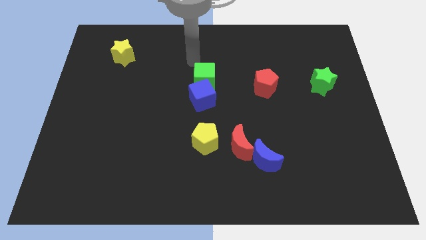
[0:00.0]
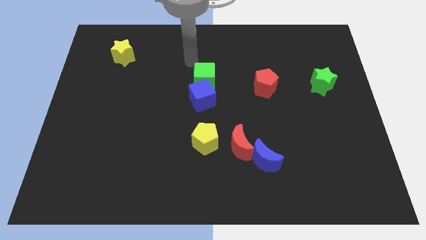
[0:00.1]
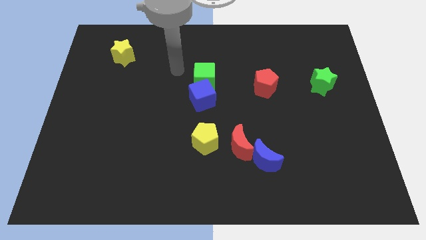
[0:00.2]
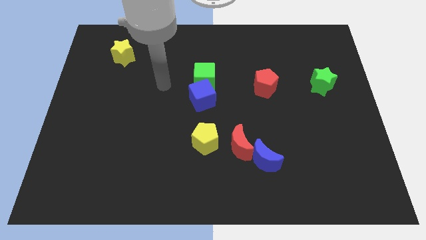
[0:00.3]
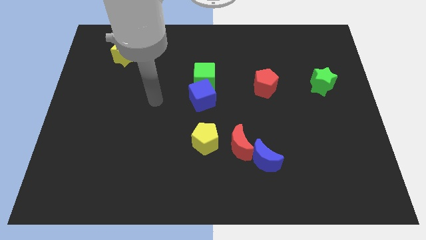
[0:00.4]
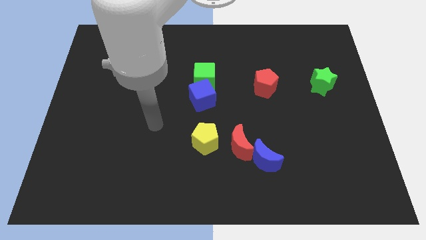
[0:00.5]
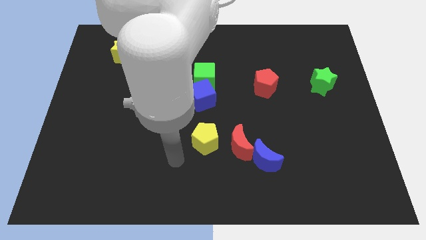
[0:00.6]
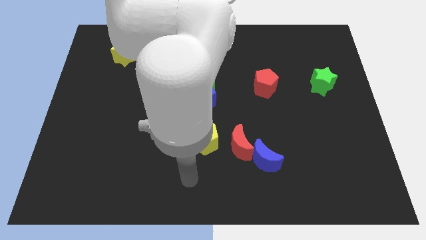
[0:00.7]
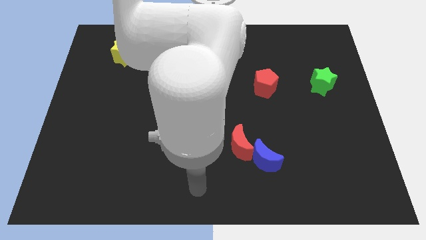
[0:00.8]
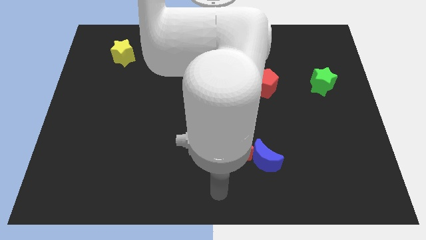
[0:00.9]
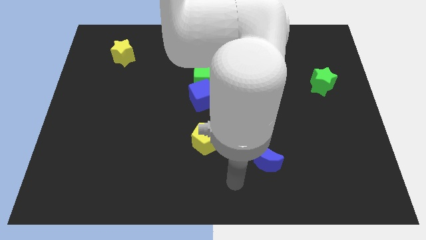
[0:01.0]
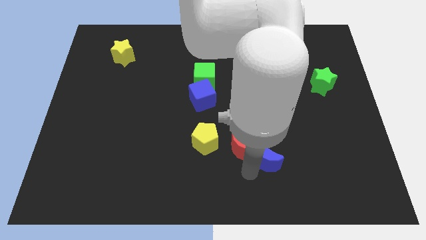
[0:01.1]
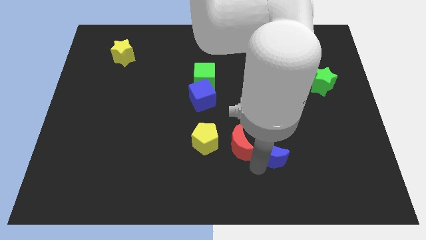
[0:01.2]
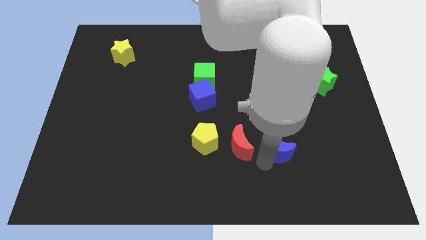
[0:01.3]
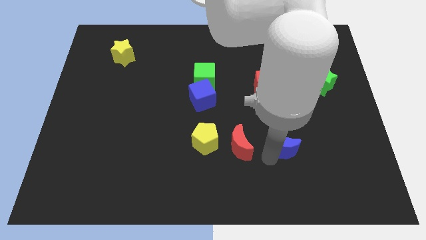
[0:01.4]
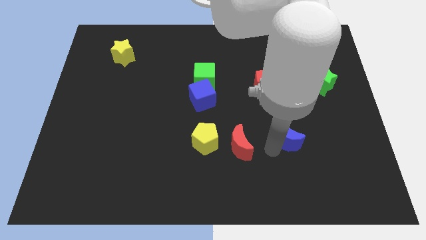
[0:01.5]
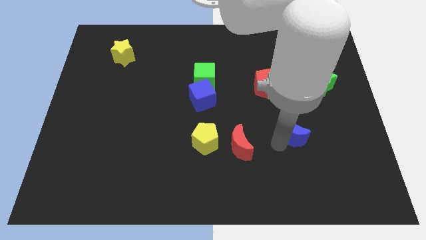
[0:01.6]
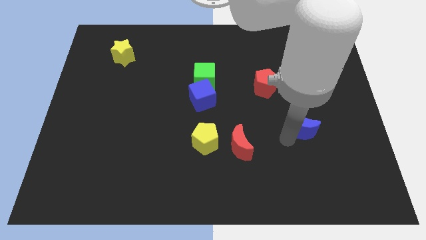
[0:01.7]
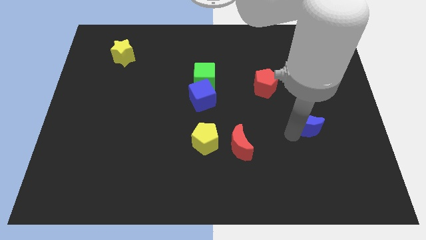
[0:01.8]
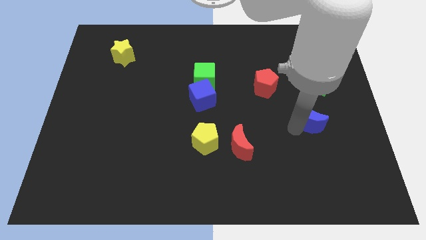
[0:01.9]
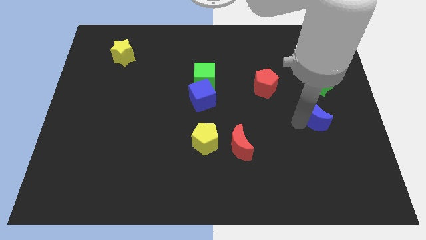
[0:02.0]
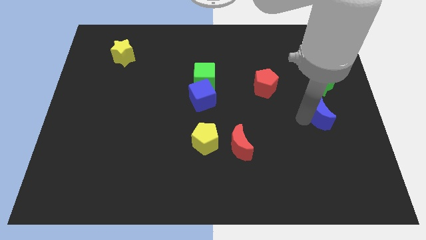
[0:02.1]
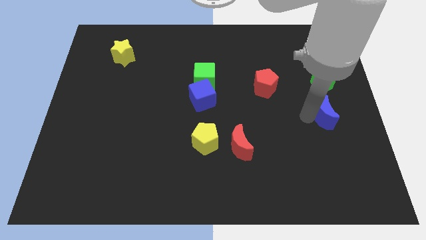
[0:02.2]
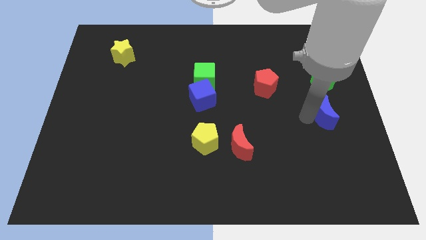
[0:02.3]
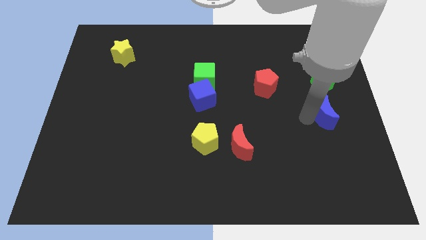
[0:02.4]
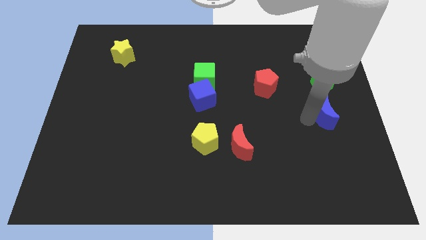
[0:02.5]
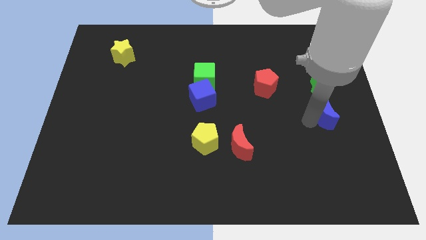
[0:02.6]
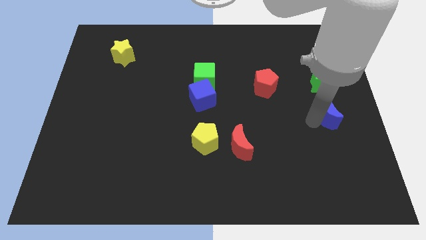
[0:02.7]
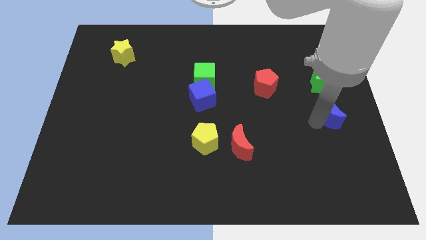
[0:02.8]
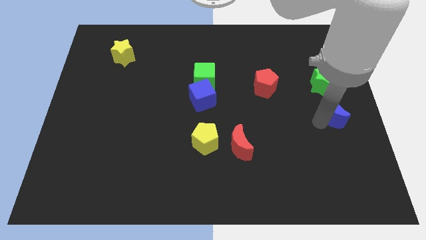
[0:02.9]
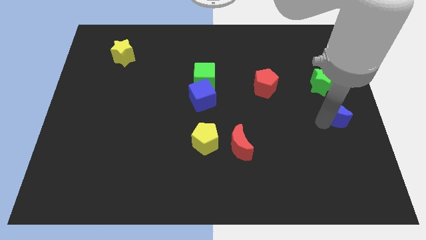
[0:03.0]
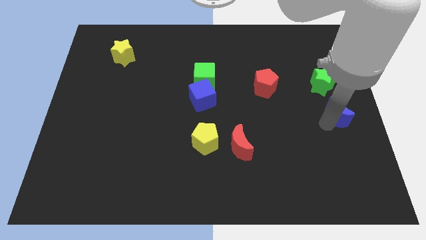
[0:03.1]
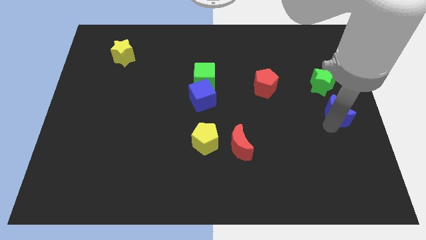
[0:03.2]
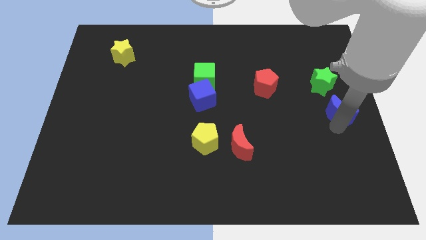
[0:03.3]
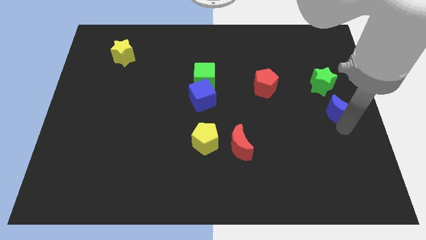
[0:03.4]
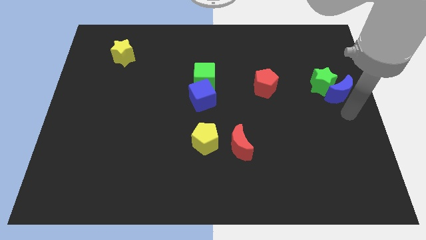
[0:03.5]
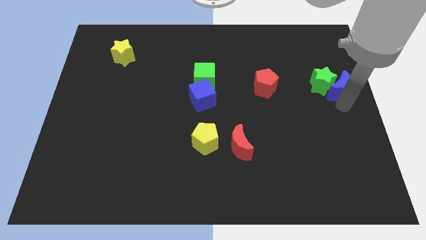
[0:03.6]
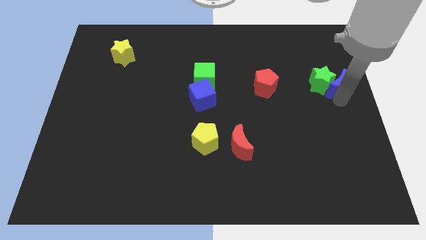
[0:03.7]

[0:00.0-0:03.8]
push the blue moon next to the green star

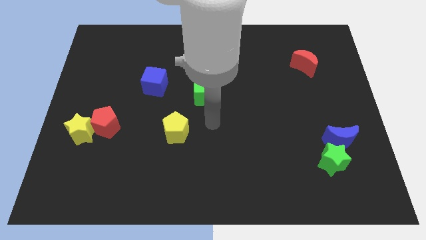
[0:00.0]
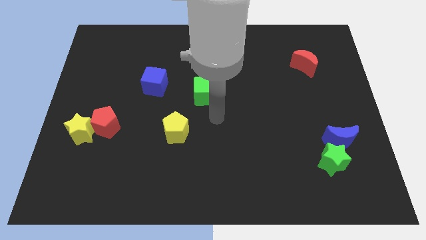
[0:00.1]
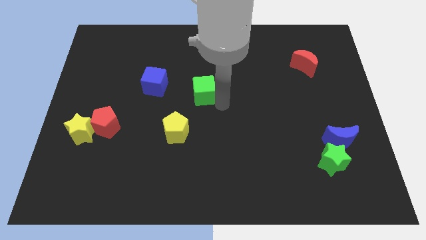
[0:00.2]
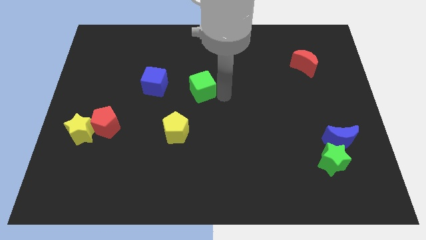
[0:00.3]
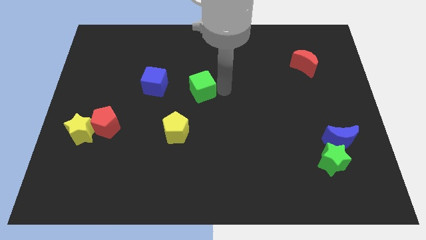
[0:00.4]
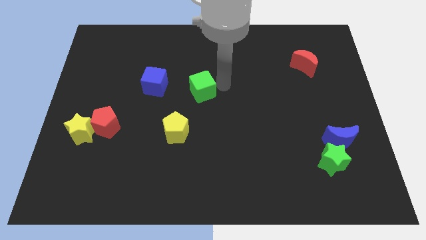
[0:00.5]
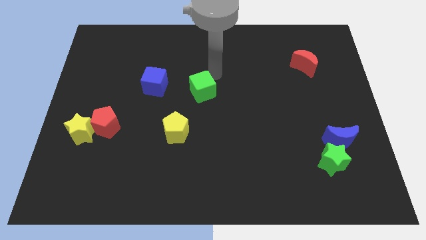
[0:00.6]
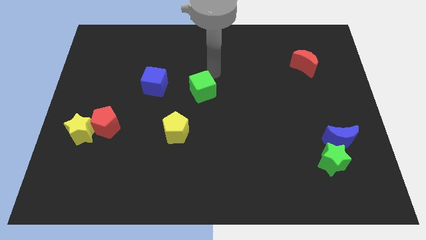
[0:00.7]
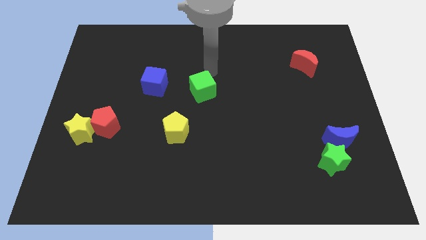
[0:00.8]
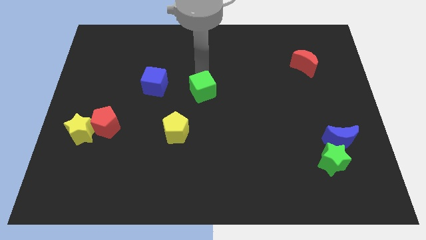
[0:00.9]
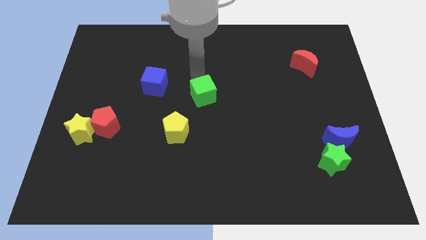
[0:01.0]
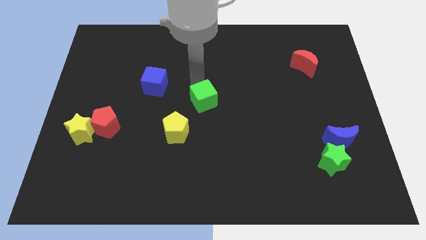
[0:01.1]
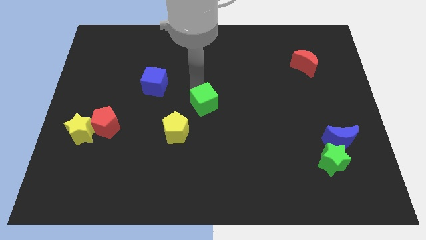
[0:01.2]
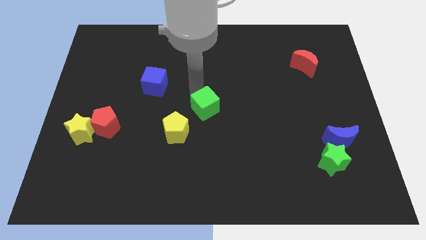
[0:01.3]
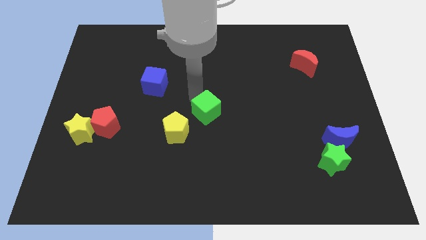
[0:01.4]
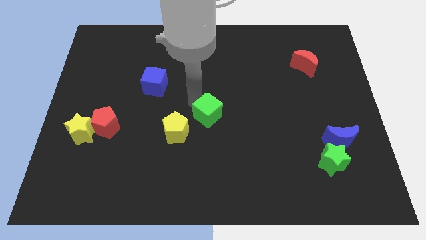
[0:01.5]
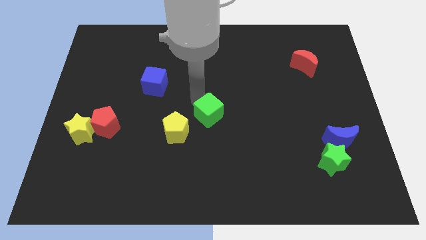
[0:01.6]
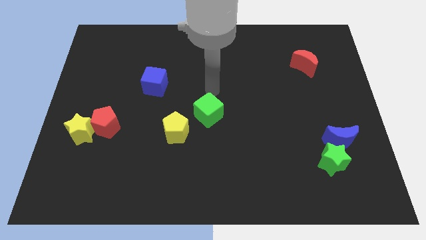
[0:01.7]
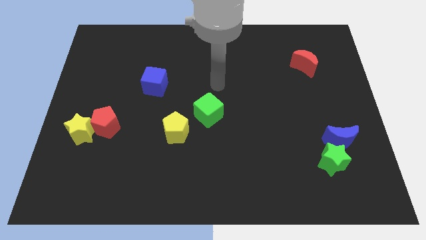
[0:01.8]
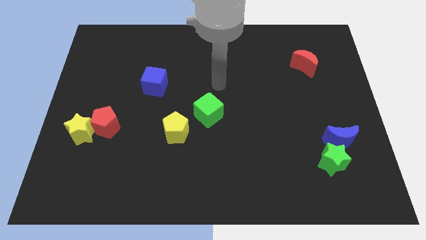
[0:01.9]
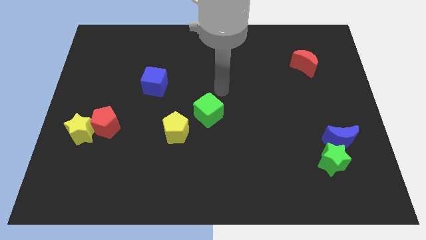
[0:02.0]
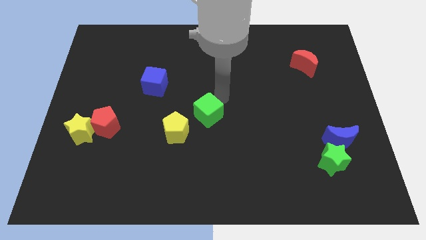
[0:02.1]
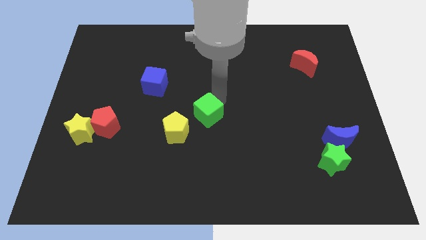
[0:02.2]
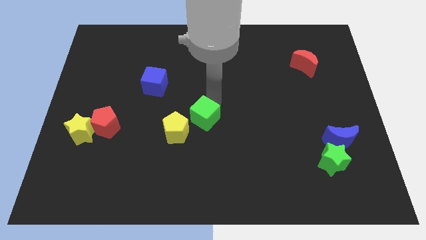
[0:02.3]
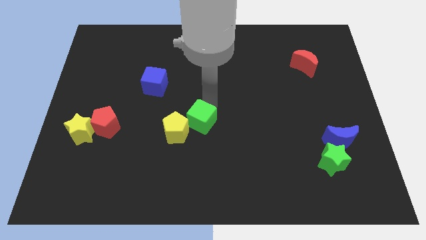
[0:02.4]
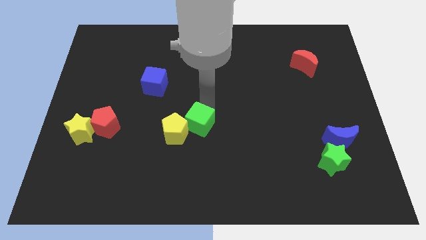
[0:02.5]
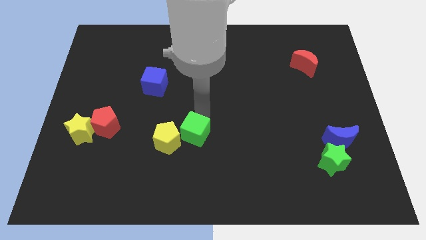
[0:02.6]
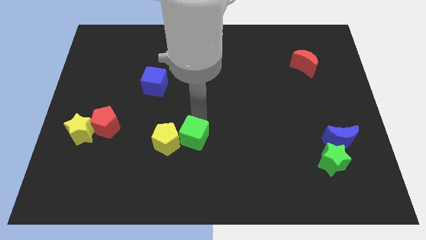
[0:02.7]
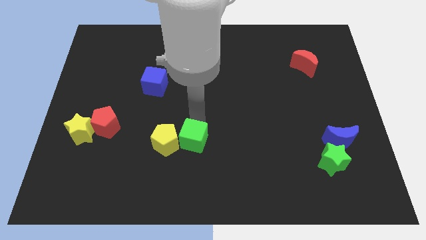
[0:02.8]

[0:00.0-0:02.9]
put the green cube towards the yellow pentagon

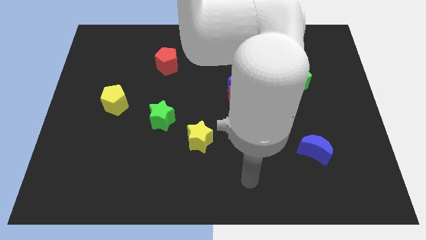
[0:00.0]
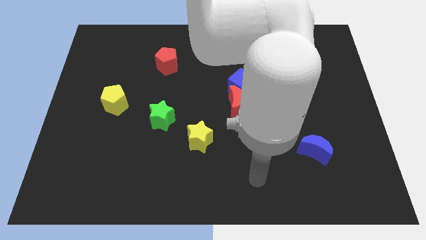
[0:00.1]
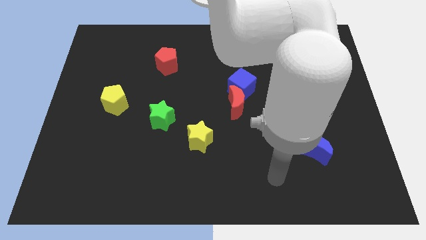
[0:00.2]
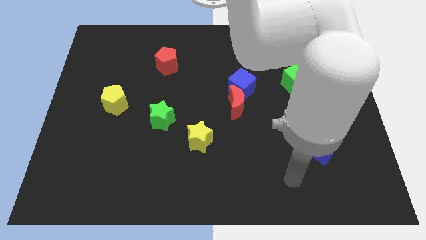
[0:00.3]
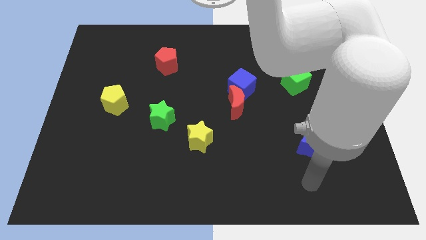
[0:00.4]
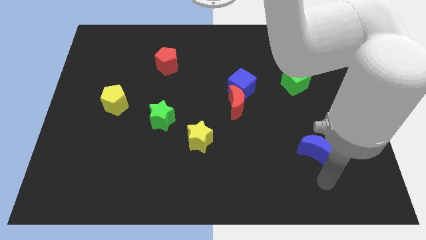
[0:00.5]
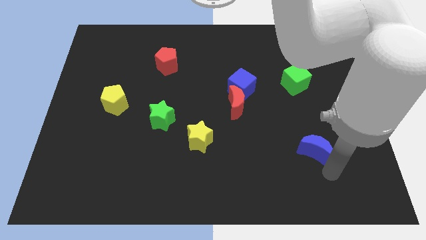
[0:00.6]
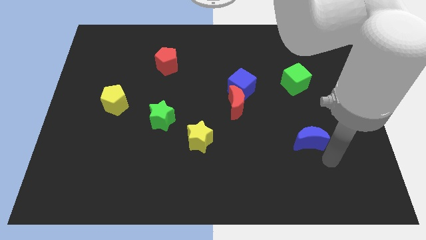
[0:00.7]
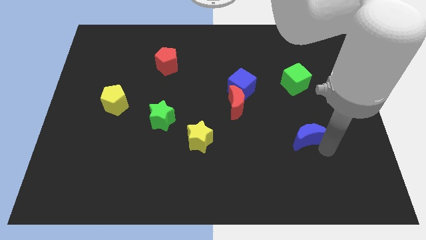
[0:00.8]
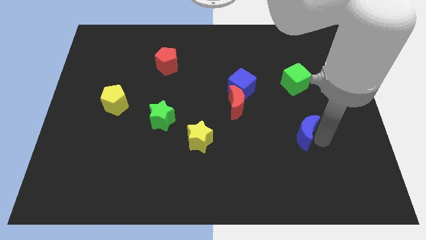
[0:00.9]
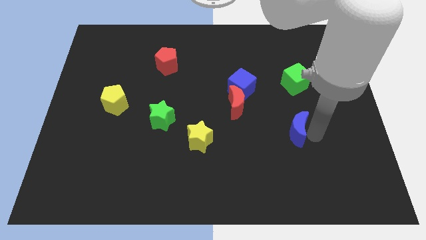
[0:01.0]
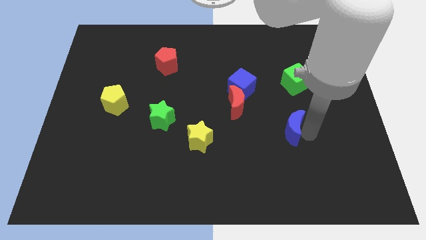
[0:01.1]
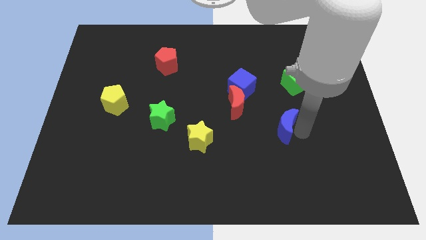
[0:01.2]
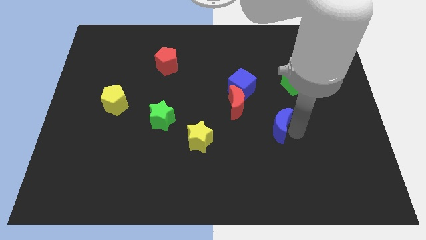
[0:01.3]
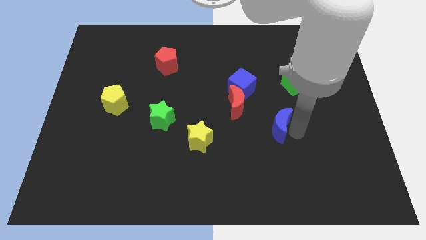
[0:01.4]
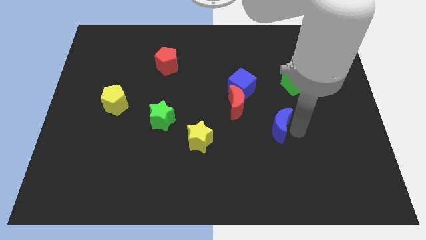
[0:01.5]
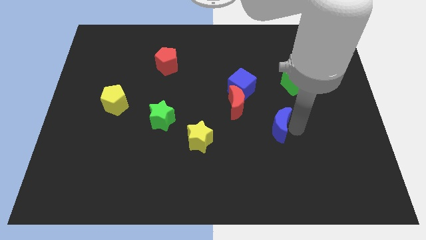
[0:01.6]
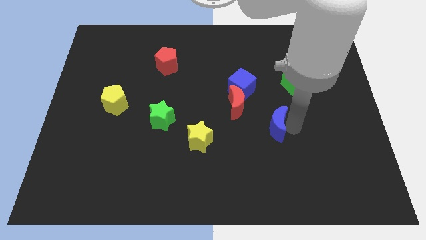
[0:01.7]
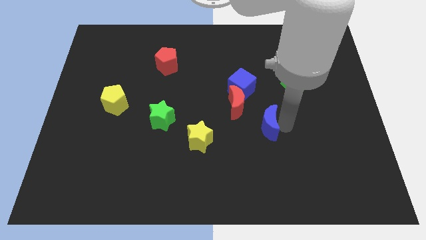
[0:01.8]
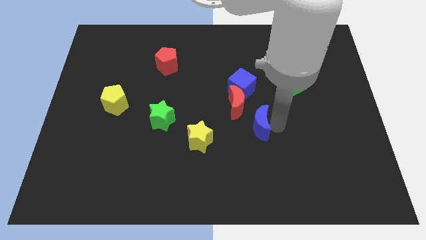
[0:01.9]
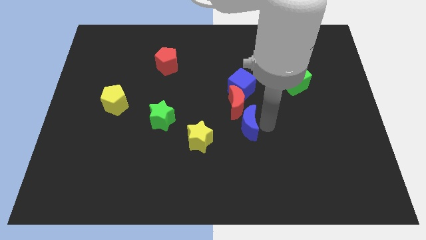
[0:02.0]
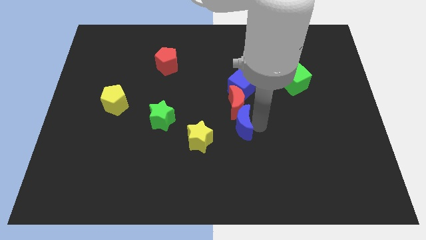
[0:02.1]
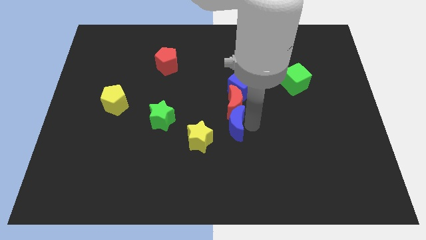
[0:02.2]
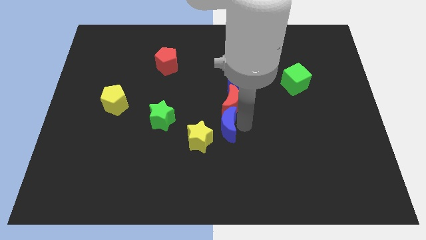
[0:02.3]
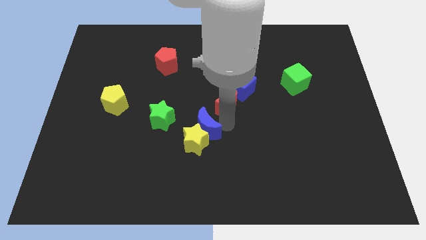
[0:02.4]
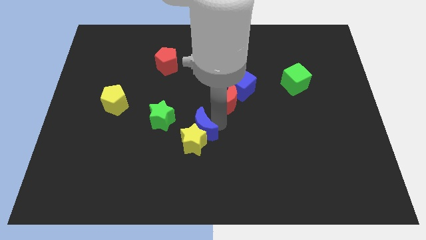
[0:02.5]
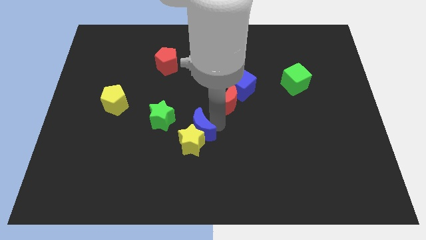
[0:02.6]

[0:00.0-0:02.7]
push the blue moon close to the yellow star
